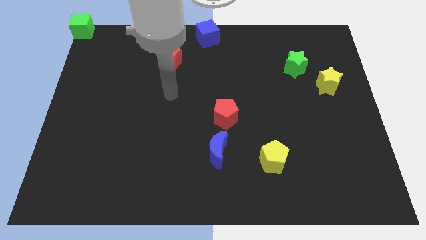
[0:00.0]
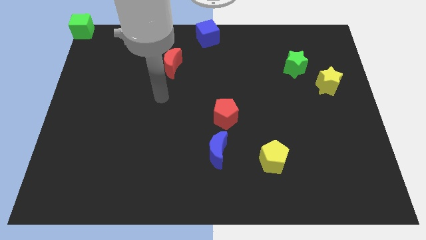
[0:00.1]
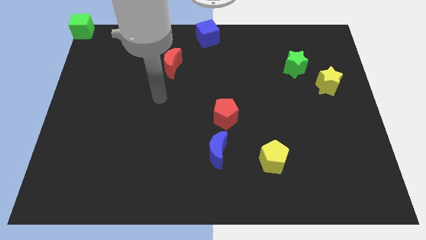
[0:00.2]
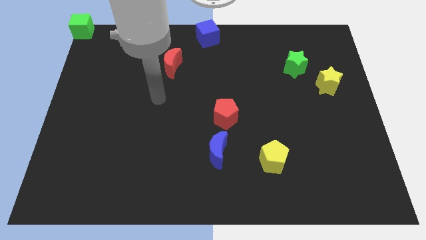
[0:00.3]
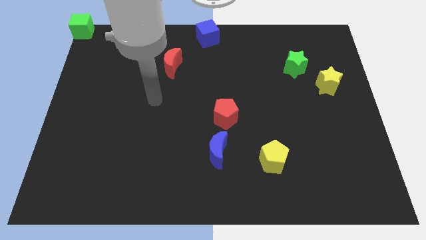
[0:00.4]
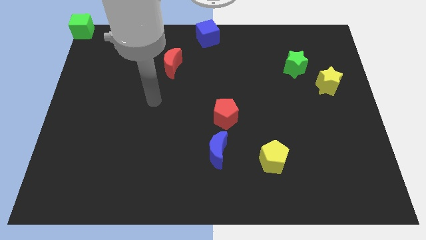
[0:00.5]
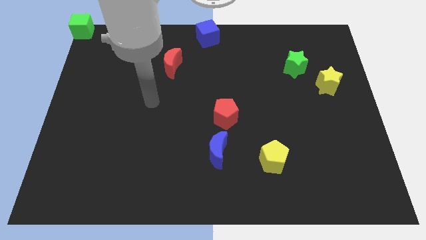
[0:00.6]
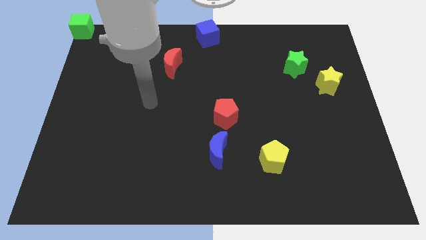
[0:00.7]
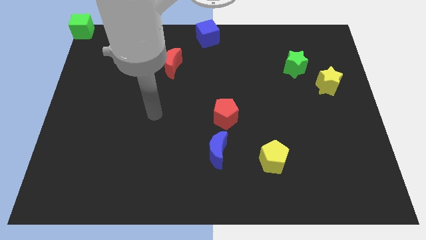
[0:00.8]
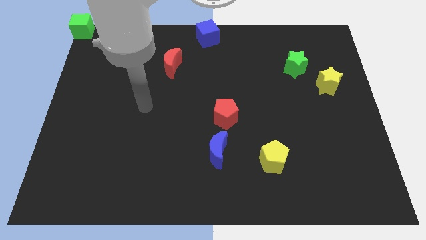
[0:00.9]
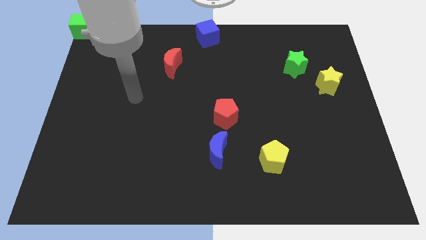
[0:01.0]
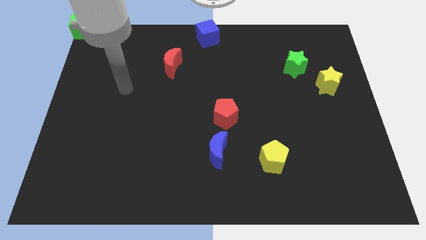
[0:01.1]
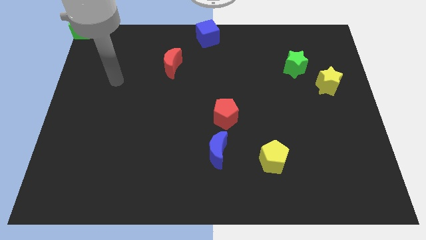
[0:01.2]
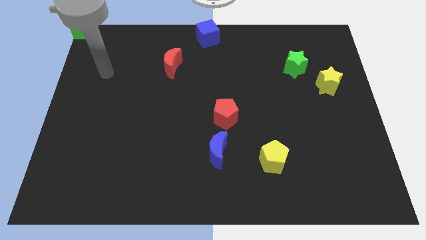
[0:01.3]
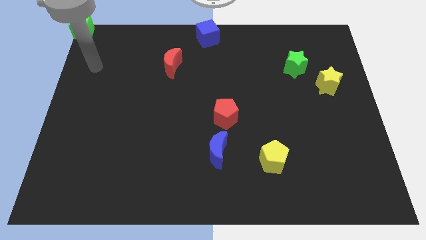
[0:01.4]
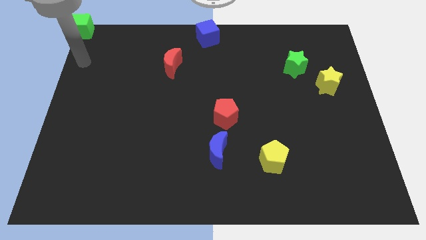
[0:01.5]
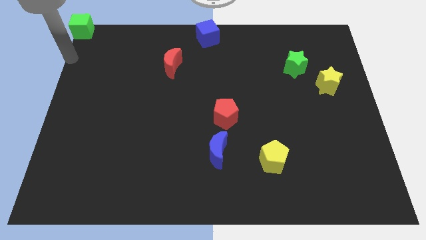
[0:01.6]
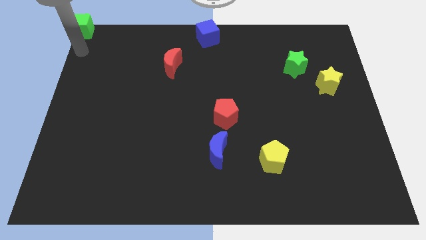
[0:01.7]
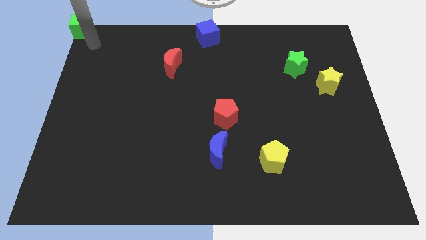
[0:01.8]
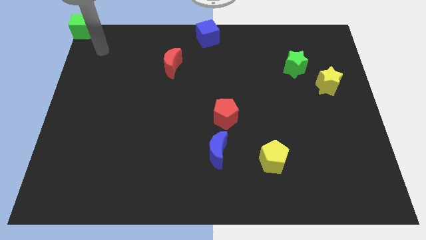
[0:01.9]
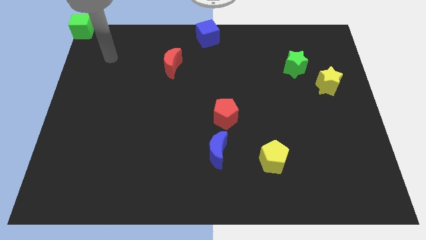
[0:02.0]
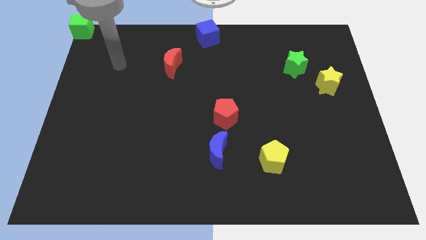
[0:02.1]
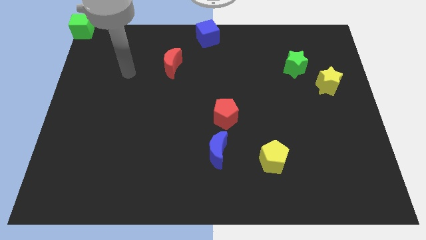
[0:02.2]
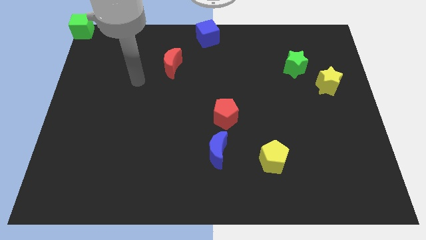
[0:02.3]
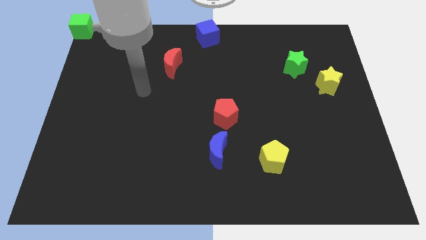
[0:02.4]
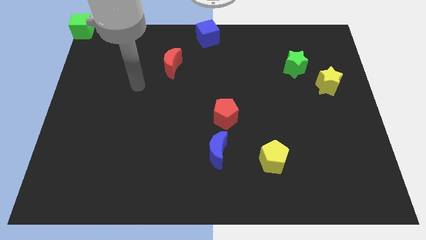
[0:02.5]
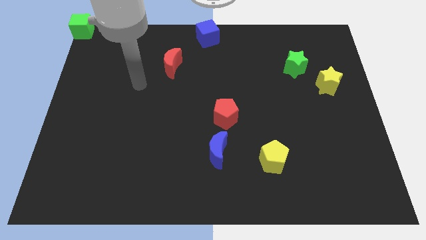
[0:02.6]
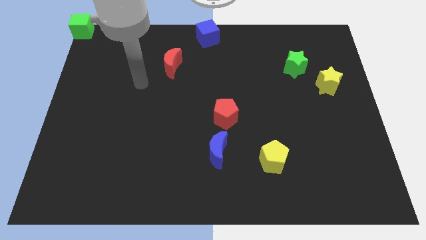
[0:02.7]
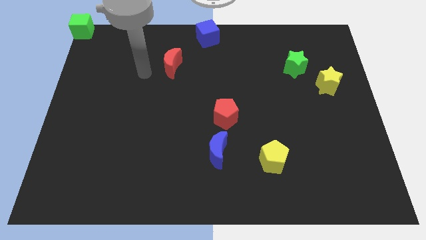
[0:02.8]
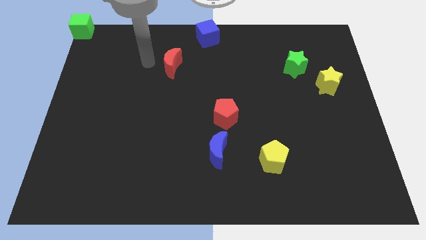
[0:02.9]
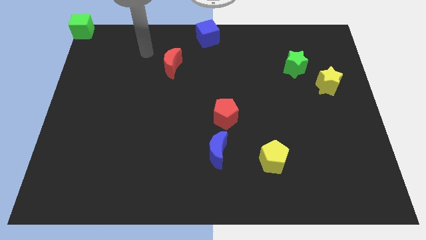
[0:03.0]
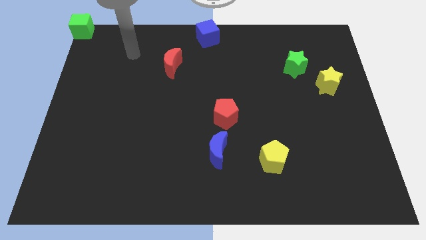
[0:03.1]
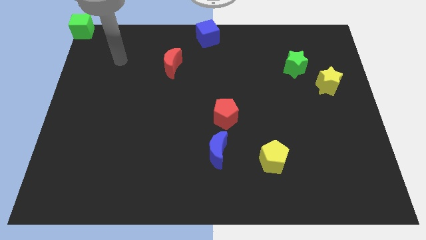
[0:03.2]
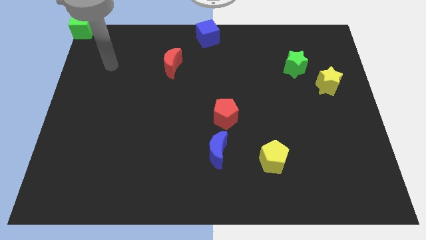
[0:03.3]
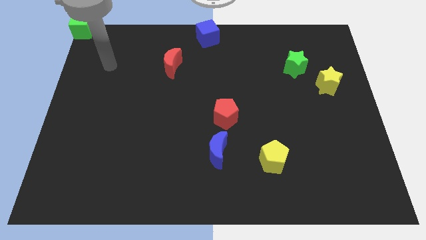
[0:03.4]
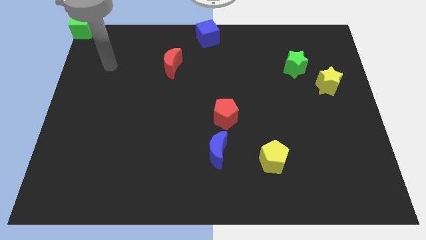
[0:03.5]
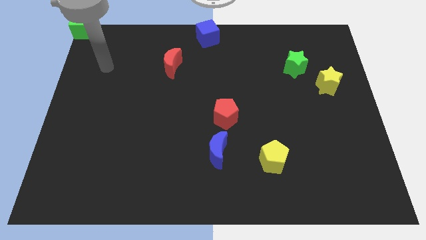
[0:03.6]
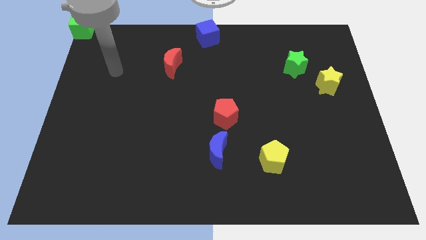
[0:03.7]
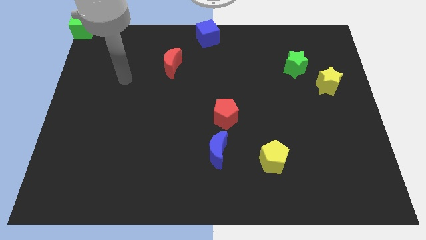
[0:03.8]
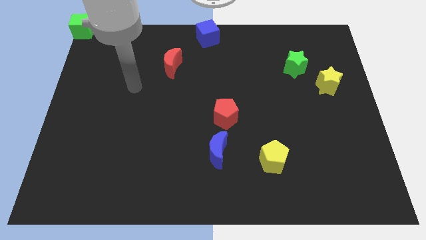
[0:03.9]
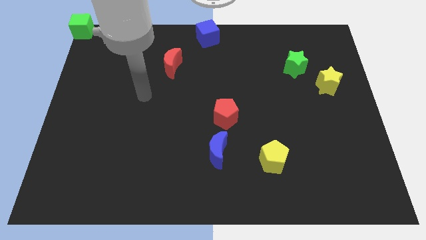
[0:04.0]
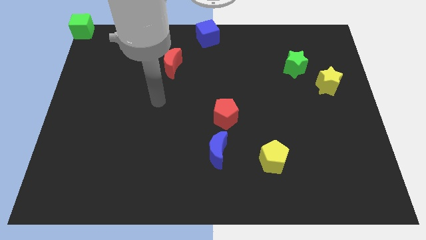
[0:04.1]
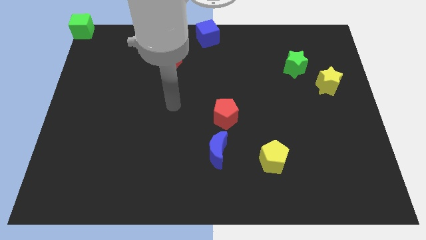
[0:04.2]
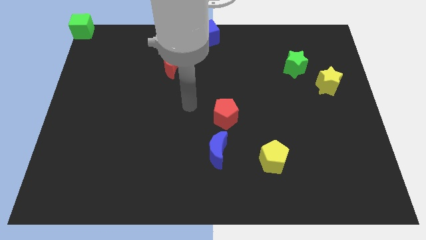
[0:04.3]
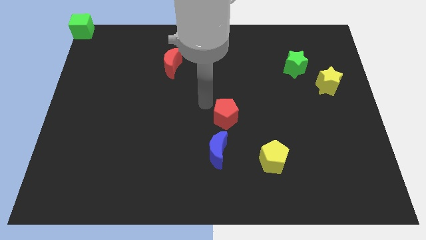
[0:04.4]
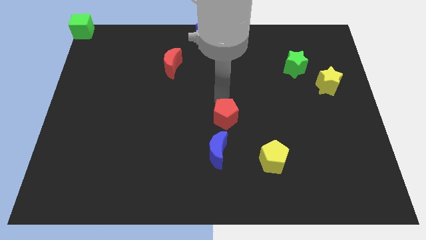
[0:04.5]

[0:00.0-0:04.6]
place your arm vertically above the red pentagon

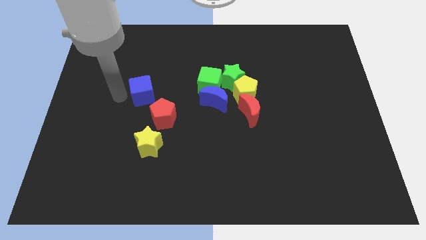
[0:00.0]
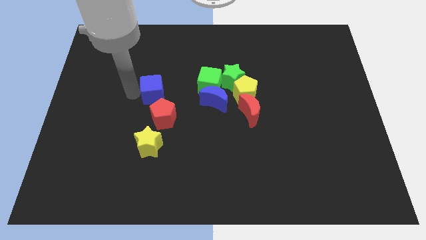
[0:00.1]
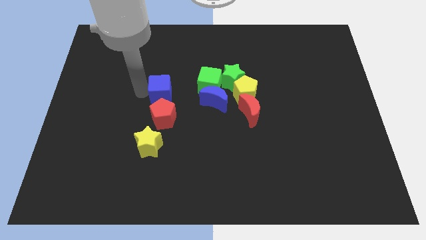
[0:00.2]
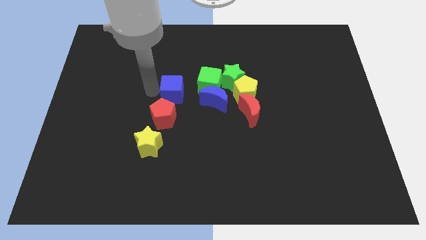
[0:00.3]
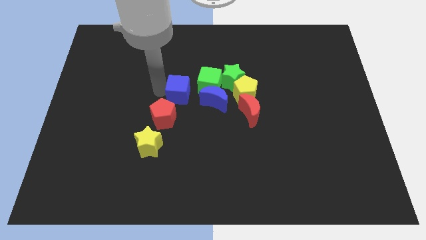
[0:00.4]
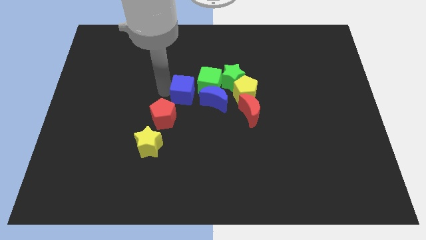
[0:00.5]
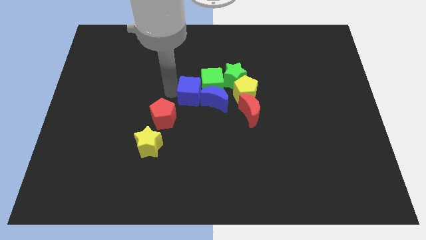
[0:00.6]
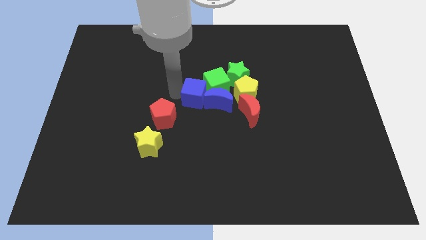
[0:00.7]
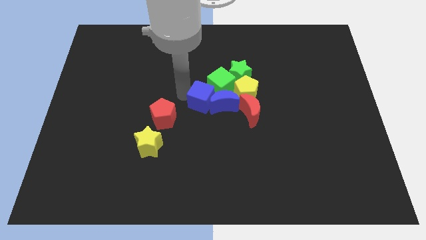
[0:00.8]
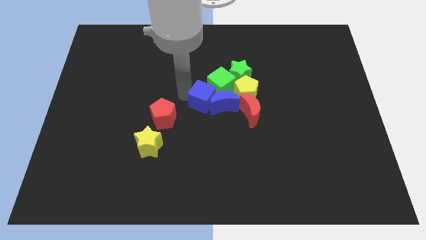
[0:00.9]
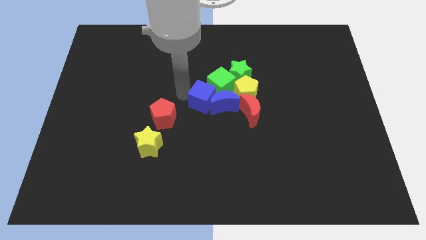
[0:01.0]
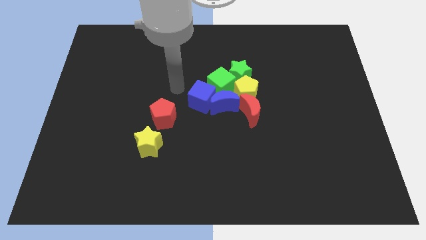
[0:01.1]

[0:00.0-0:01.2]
push the blue cube into the group of blocks

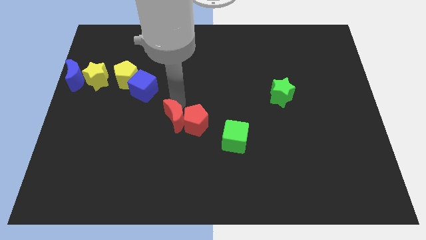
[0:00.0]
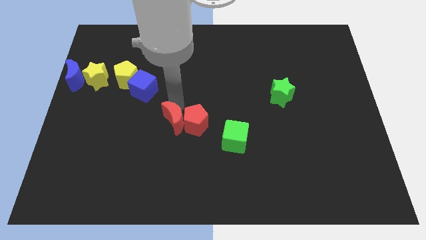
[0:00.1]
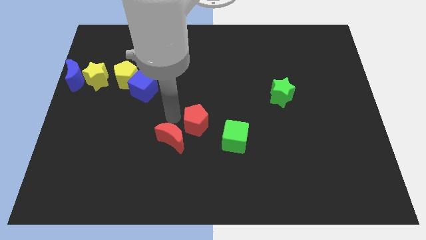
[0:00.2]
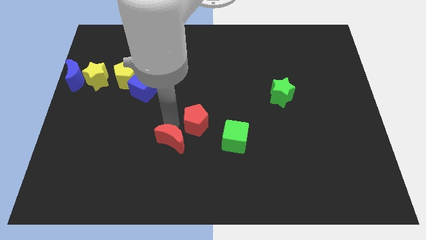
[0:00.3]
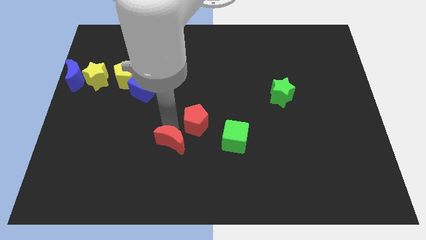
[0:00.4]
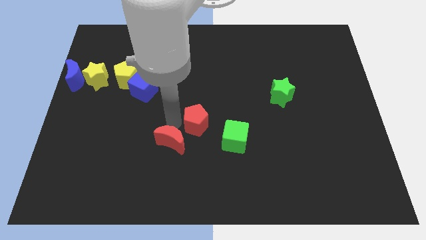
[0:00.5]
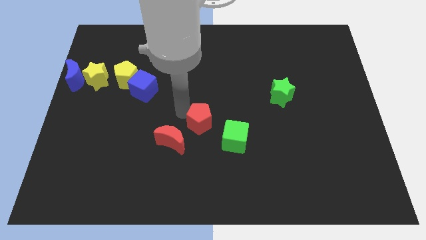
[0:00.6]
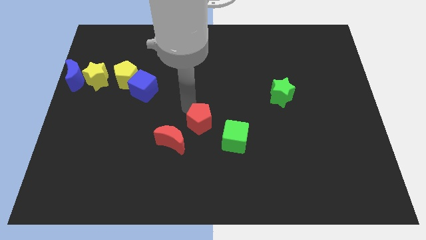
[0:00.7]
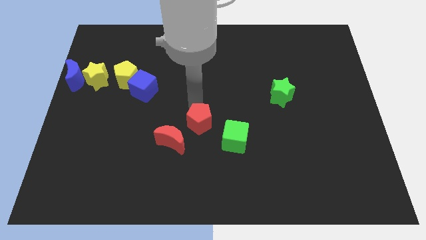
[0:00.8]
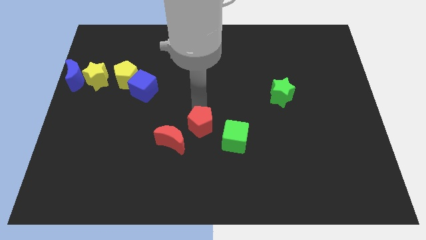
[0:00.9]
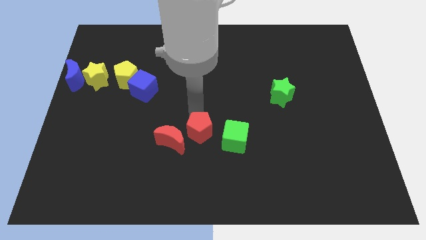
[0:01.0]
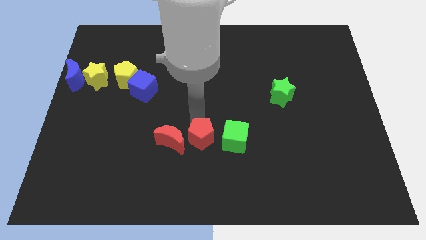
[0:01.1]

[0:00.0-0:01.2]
separate red moon from the red pentagon

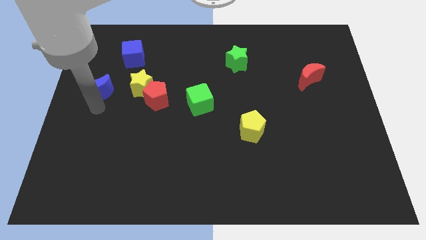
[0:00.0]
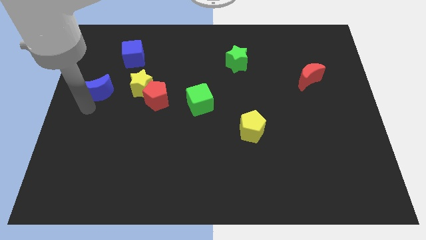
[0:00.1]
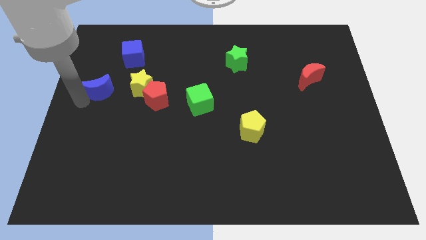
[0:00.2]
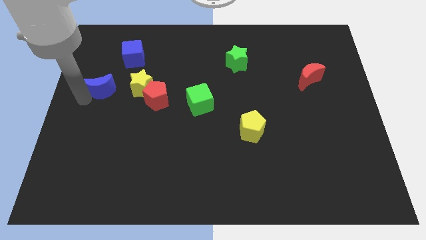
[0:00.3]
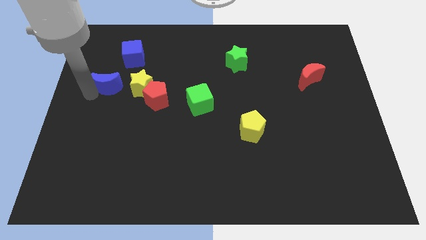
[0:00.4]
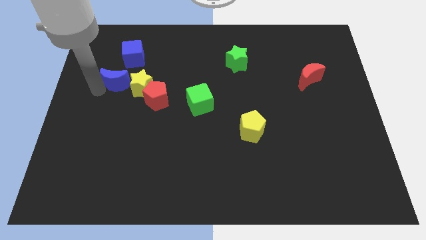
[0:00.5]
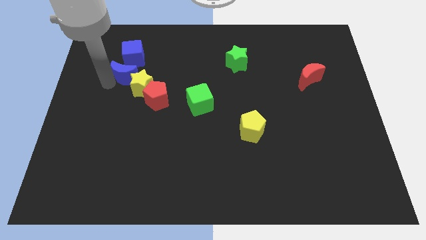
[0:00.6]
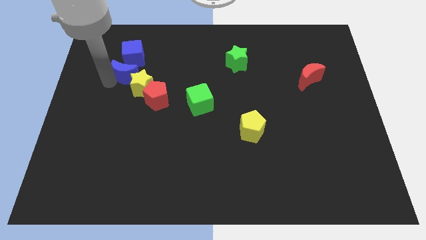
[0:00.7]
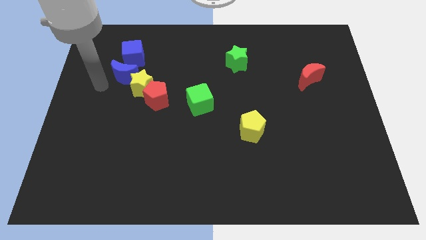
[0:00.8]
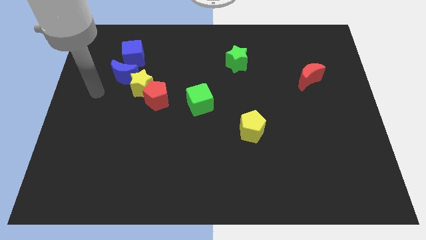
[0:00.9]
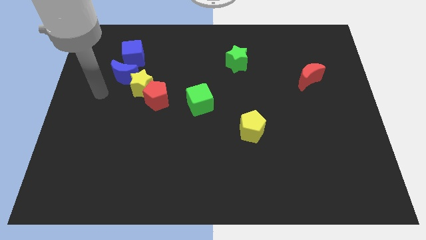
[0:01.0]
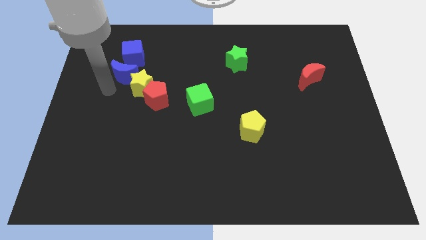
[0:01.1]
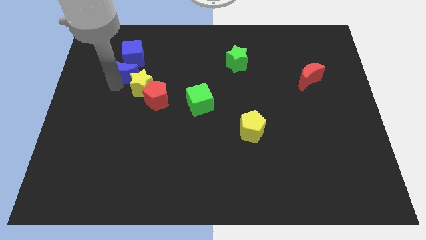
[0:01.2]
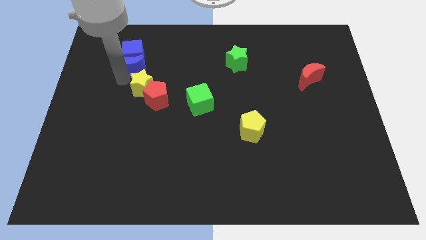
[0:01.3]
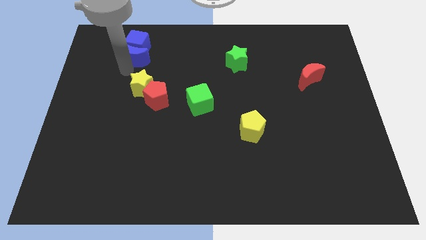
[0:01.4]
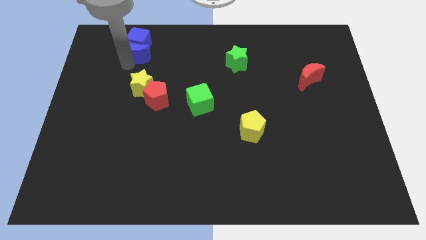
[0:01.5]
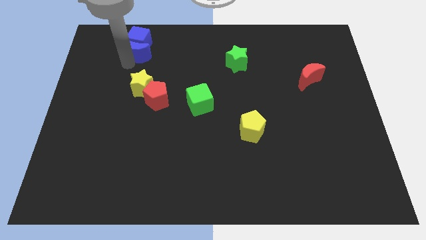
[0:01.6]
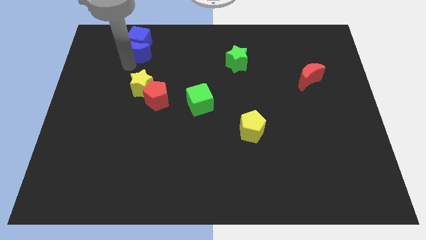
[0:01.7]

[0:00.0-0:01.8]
push the blue moon into the blue cube

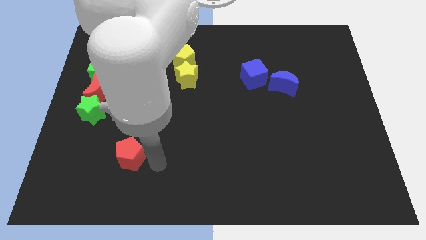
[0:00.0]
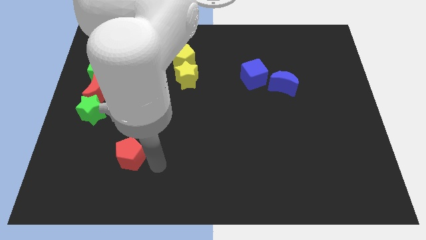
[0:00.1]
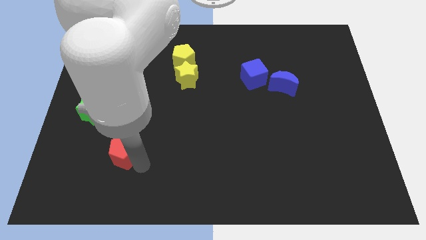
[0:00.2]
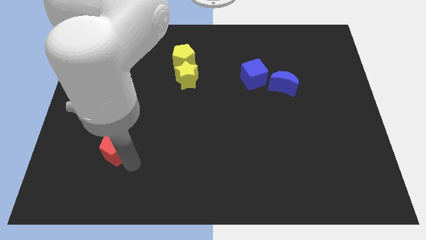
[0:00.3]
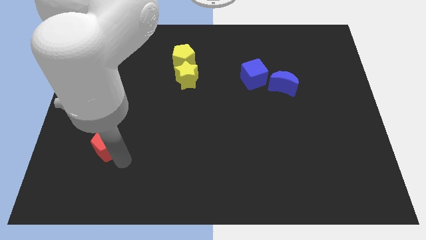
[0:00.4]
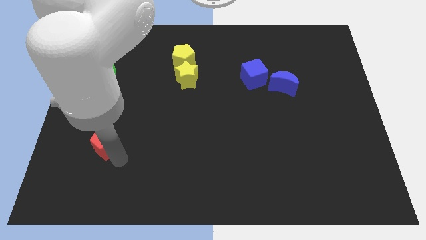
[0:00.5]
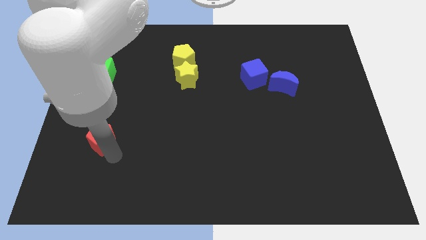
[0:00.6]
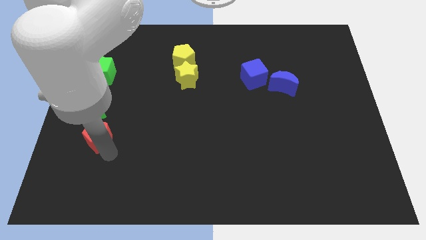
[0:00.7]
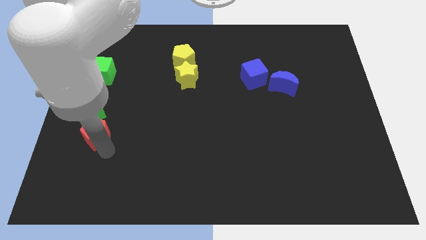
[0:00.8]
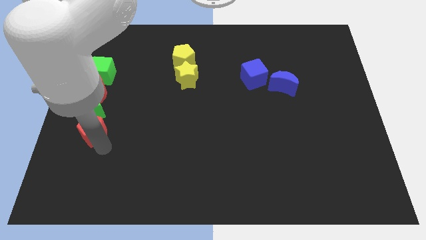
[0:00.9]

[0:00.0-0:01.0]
move red pentagon towards green star
